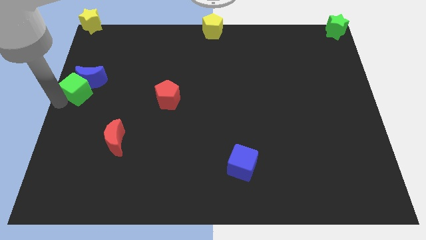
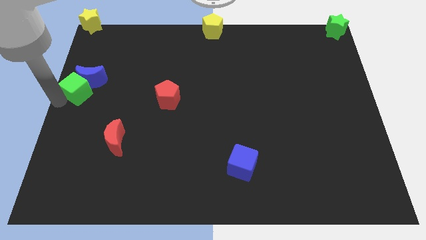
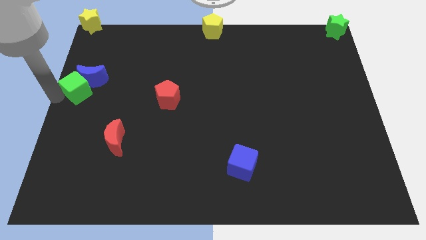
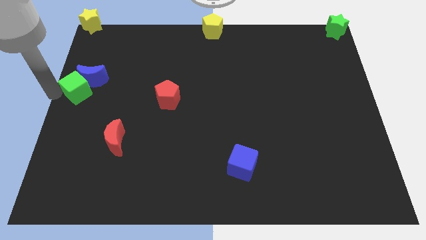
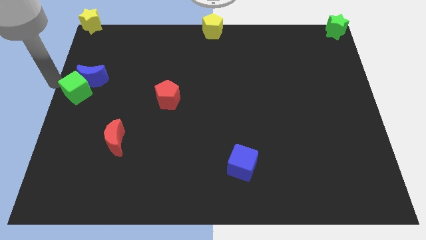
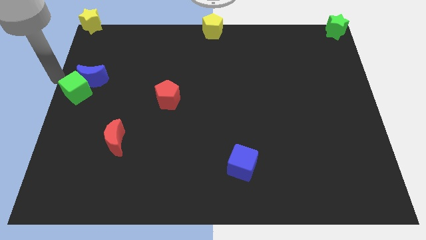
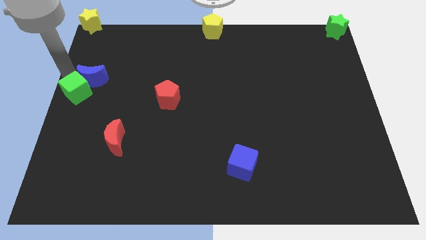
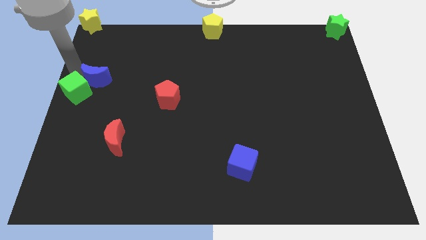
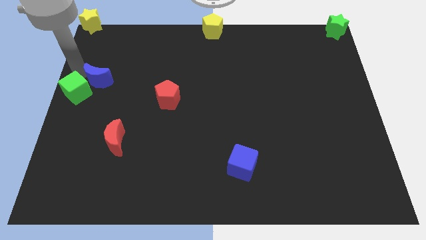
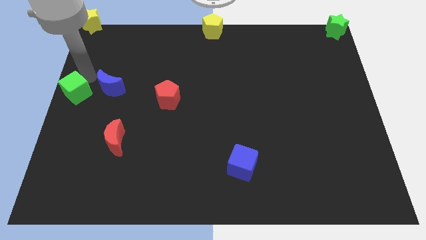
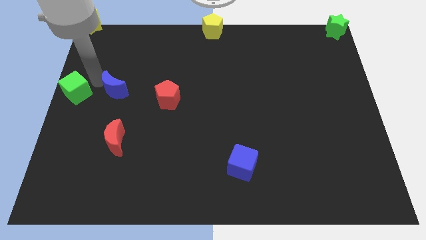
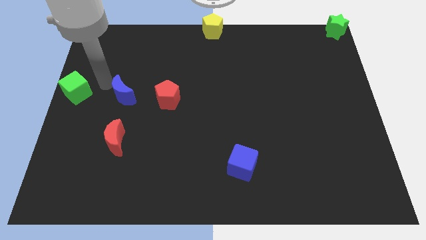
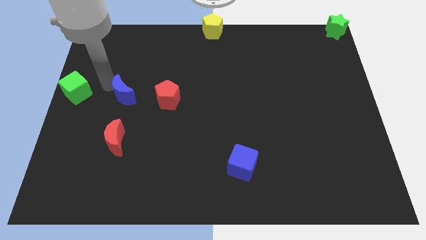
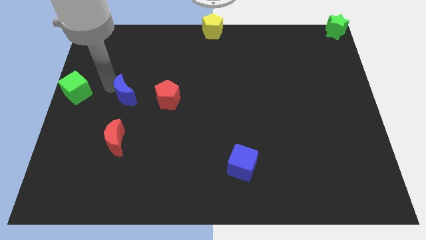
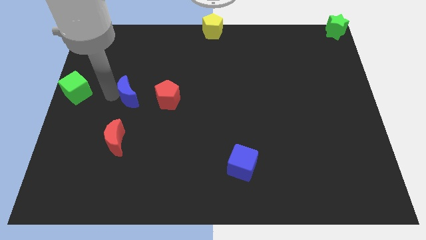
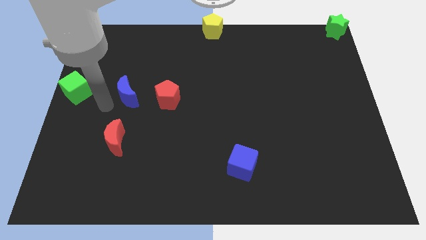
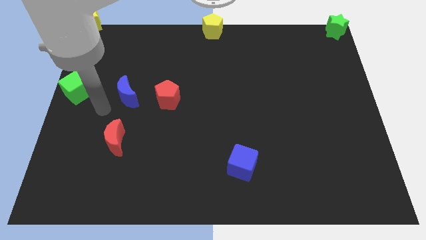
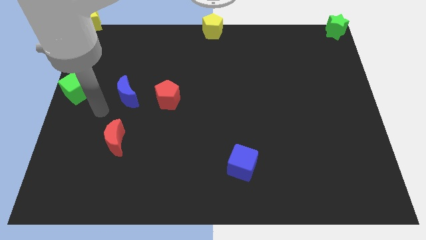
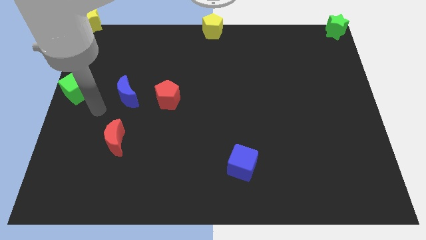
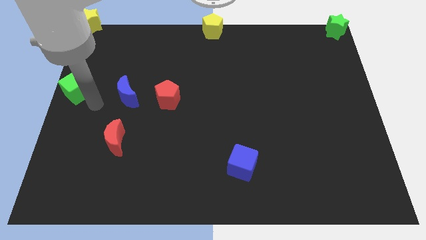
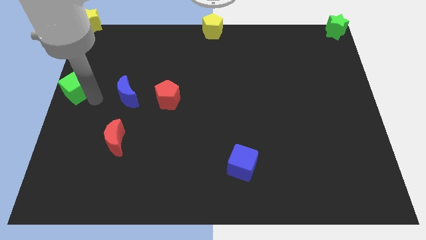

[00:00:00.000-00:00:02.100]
separate blue moon from green cube

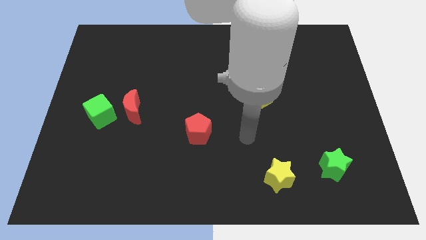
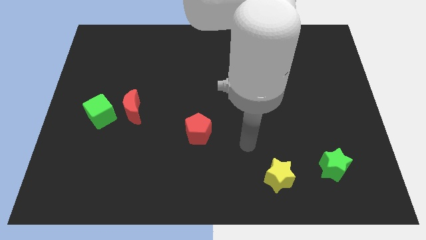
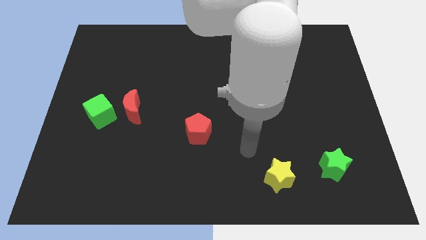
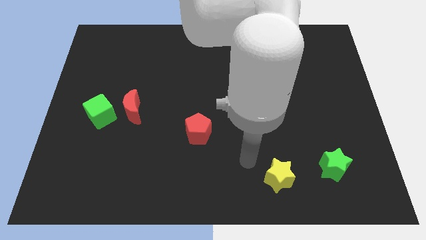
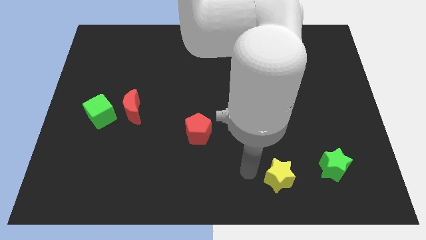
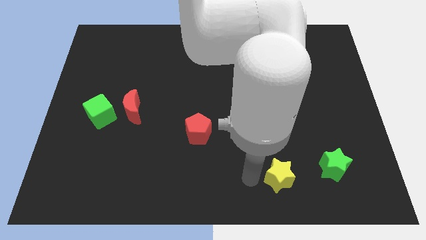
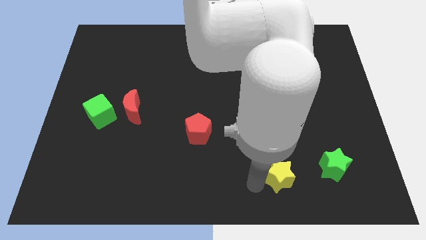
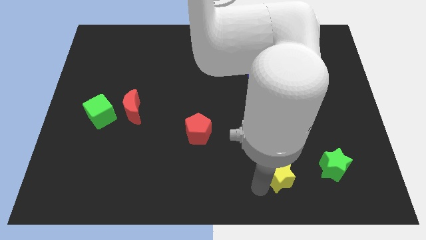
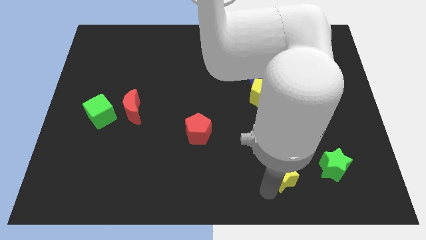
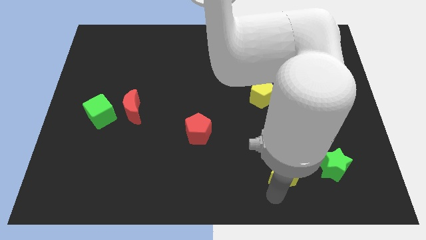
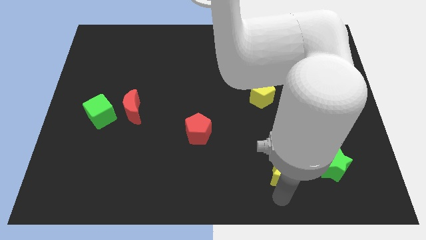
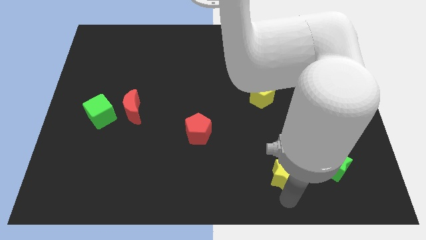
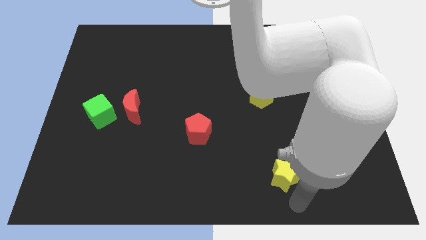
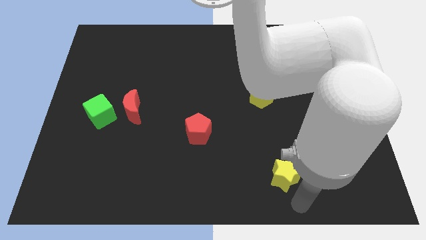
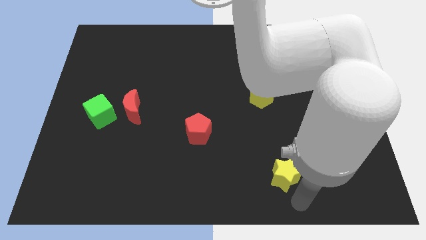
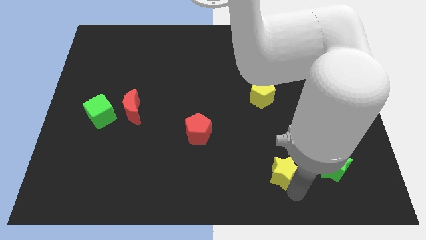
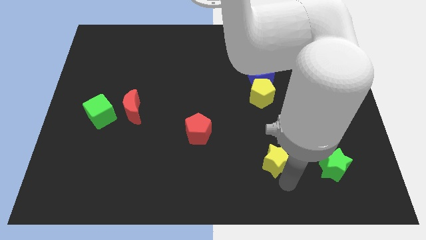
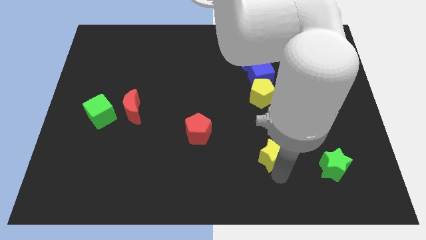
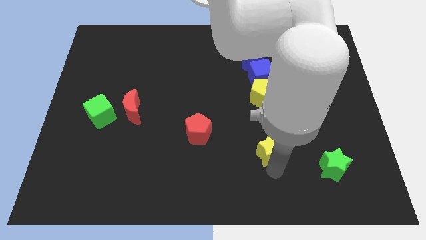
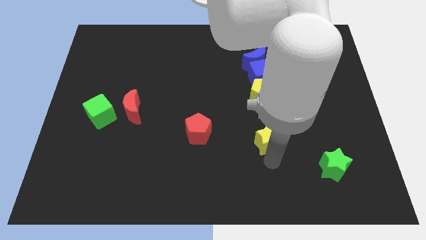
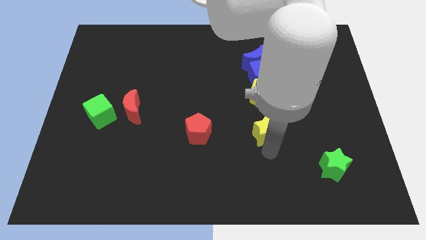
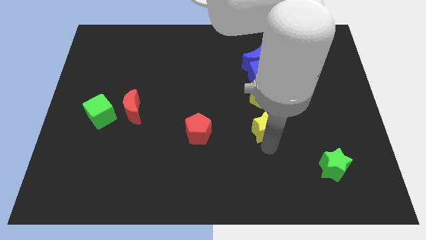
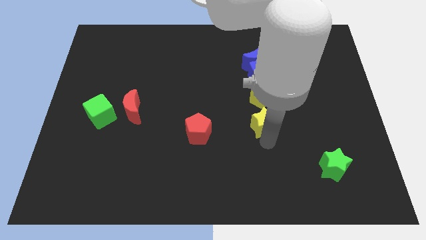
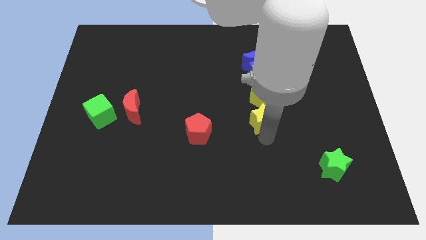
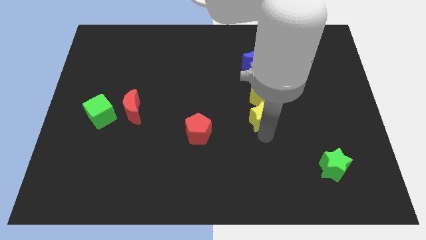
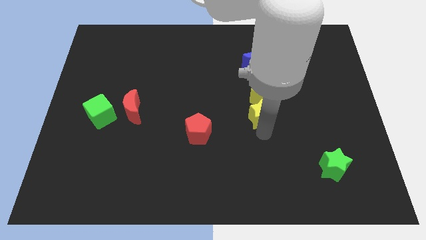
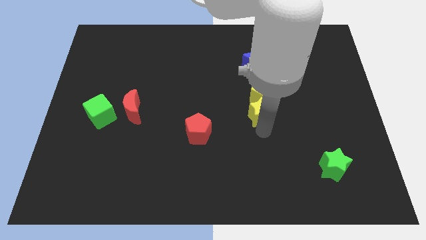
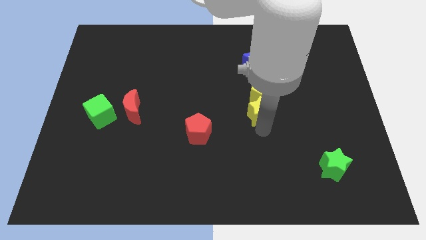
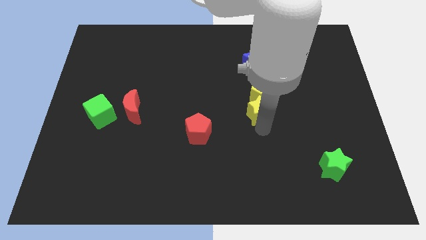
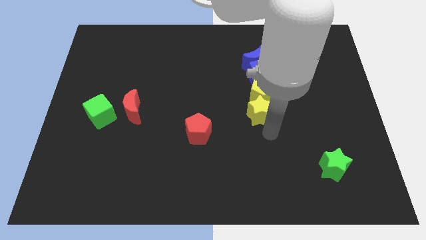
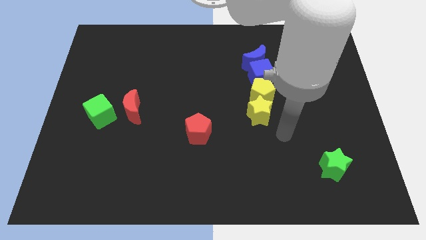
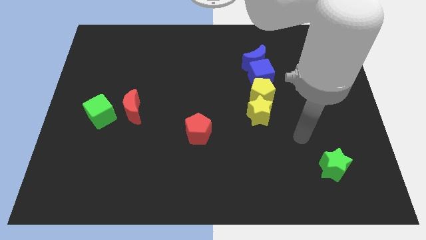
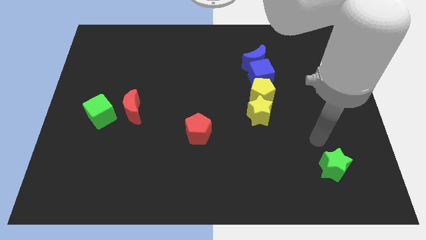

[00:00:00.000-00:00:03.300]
put the yellow star to the bottom left side of the yellow pentagon

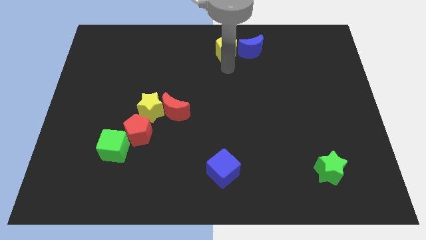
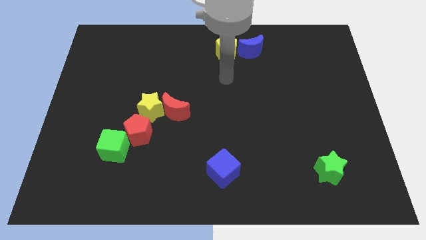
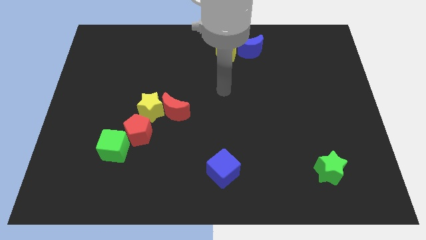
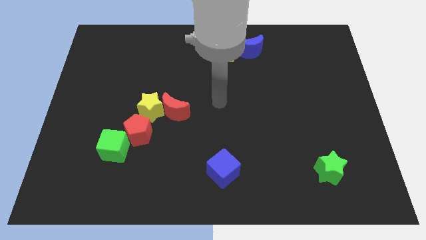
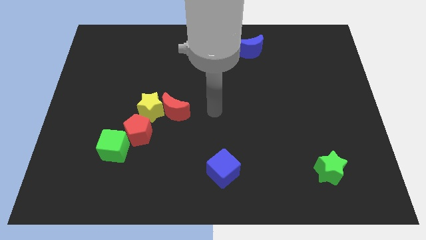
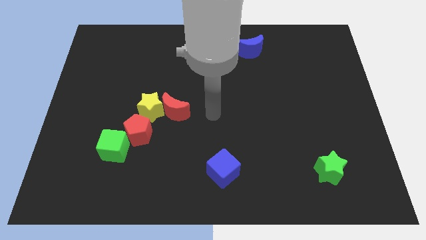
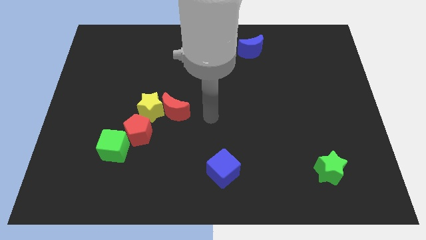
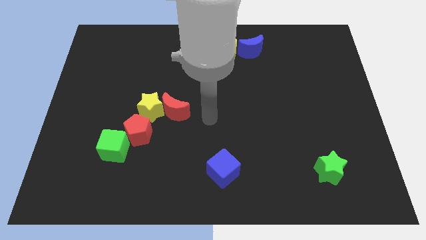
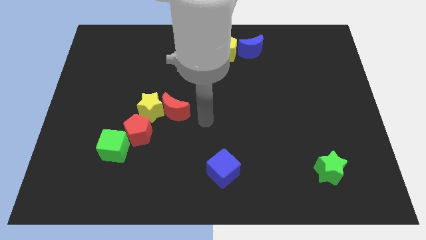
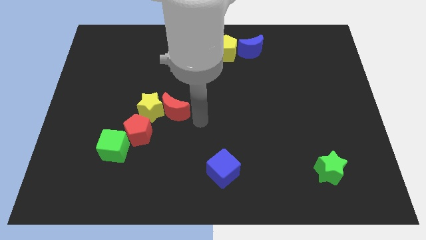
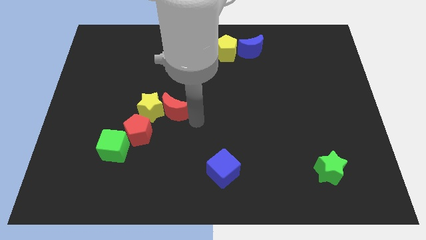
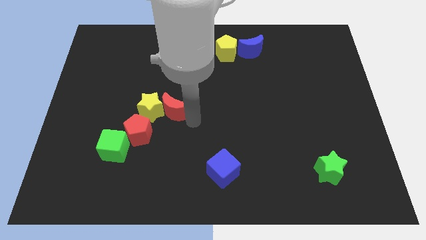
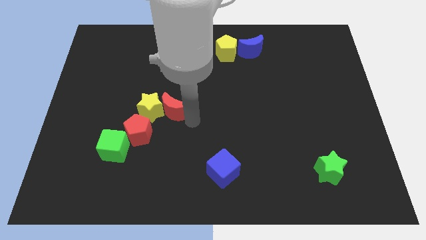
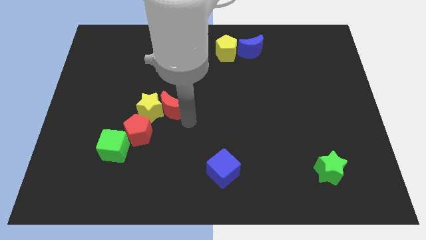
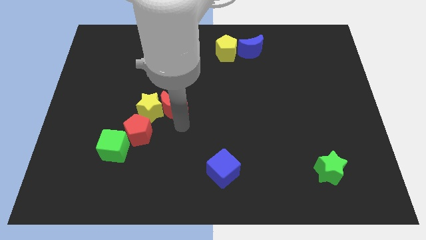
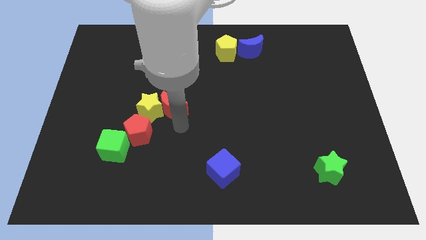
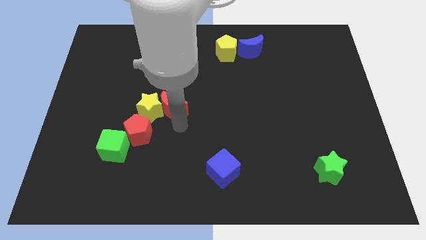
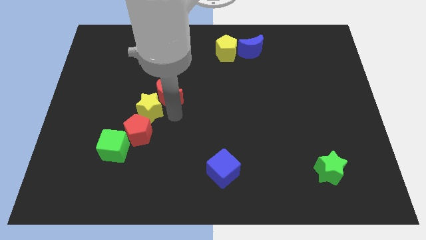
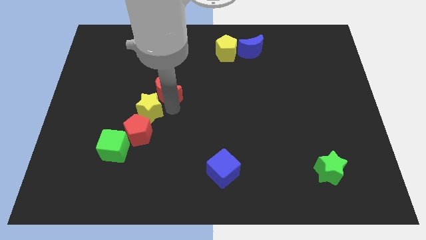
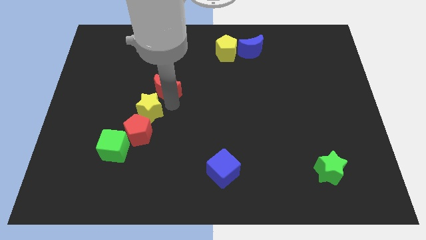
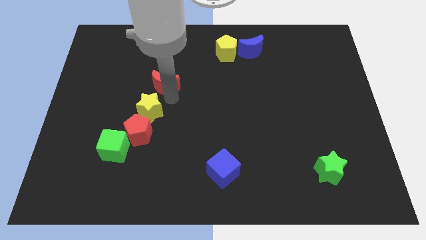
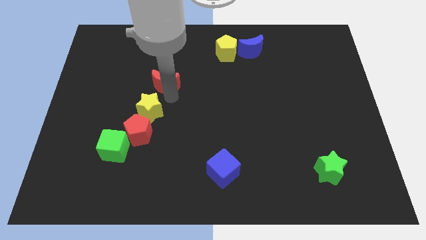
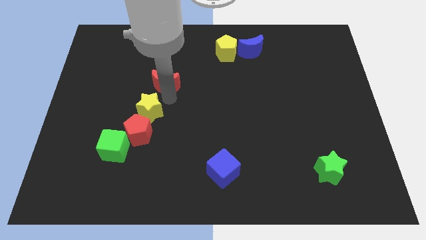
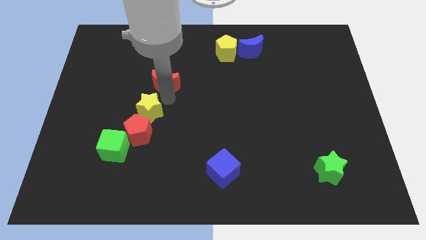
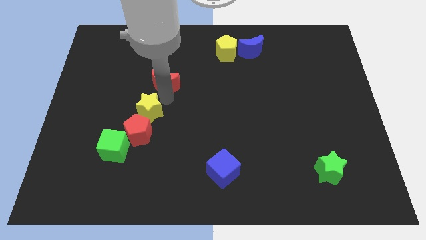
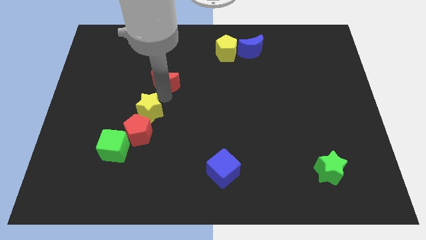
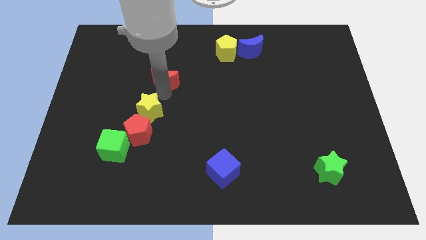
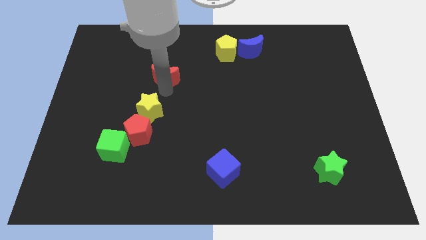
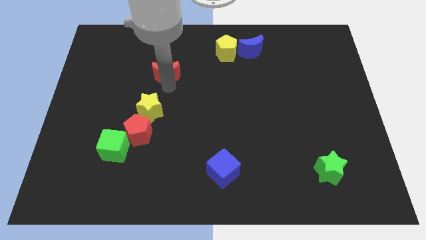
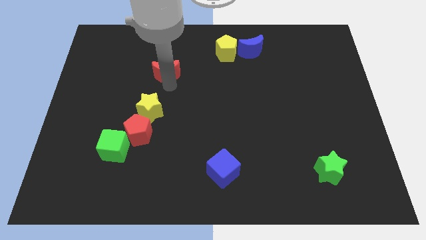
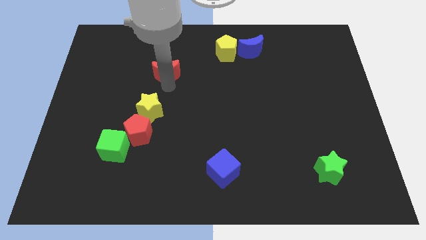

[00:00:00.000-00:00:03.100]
push the red moon upwards

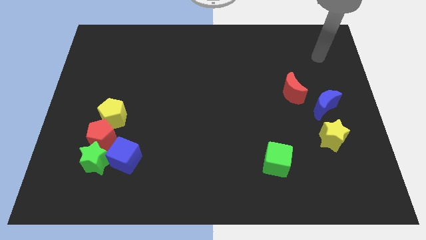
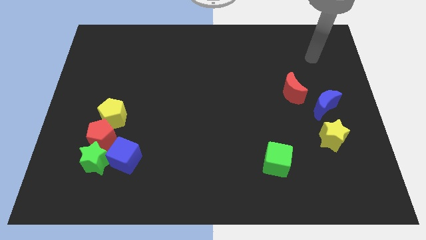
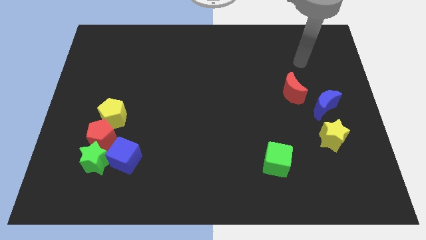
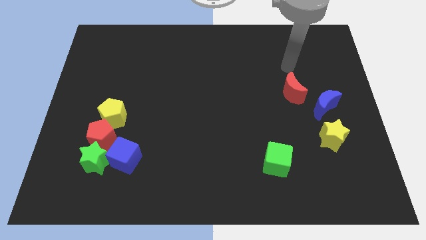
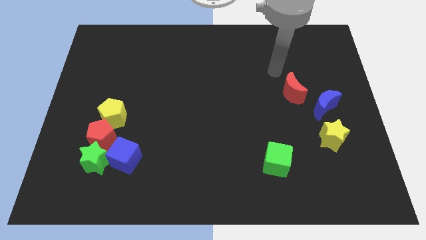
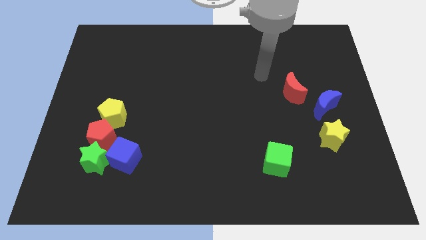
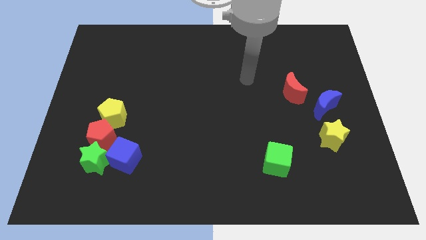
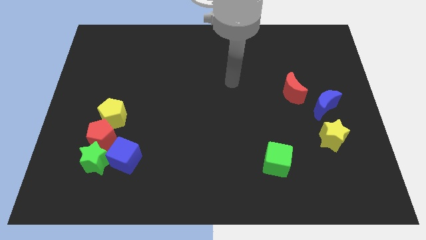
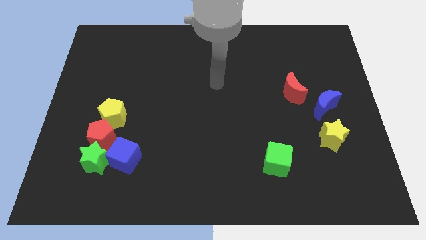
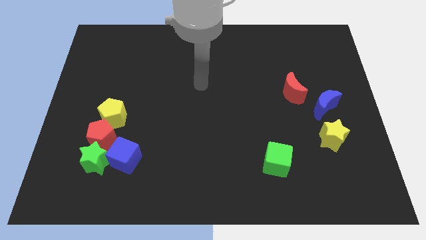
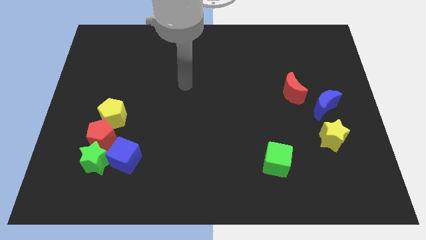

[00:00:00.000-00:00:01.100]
move your arm to the left side
